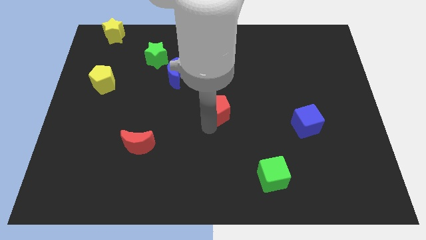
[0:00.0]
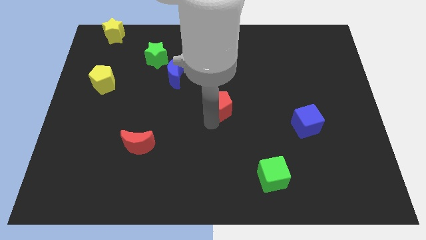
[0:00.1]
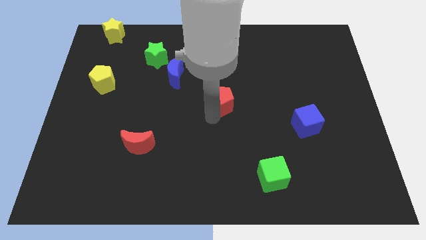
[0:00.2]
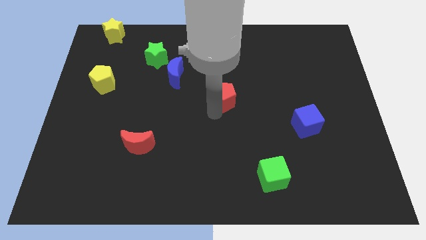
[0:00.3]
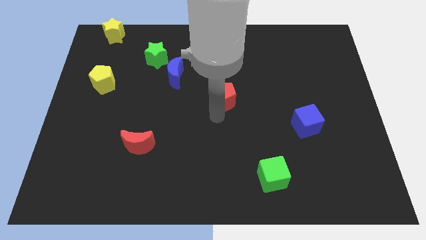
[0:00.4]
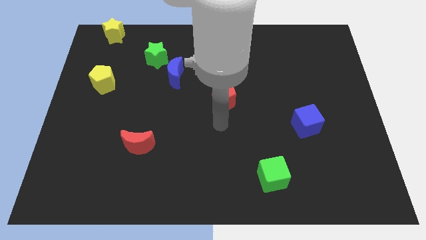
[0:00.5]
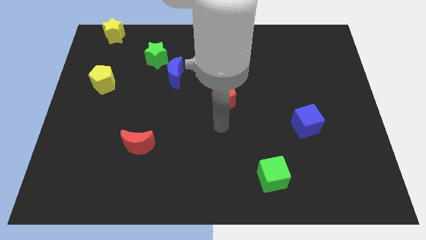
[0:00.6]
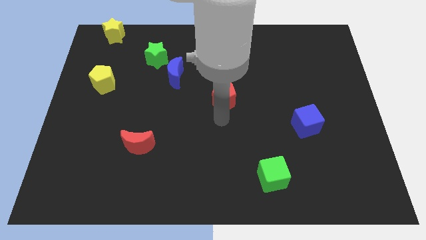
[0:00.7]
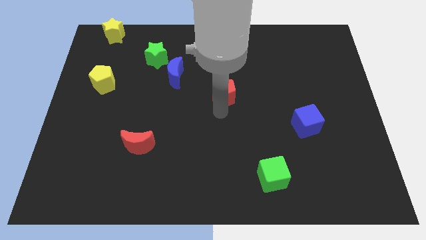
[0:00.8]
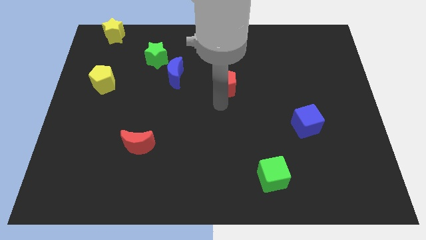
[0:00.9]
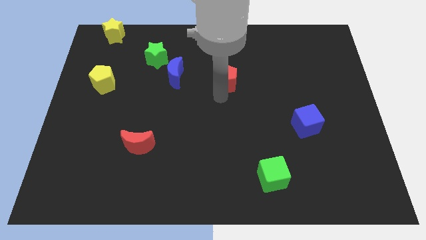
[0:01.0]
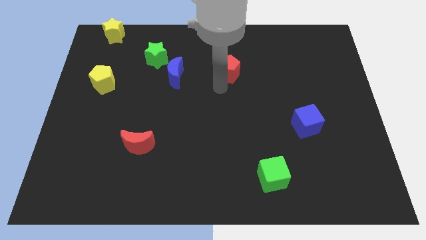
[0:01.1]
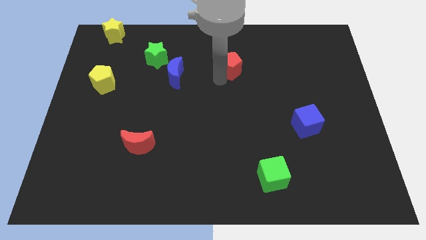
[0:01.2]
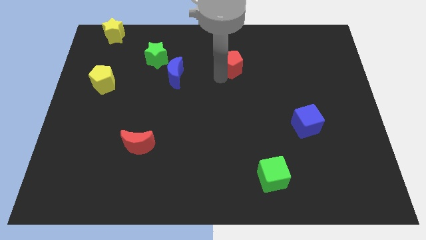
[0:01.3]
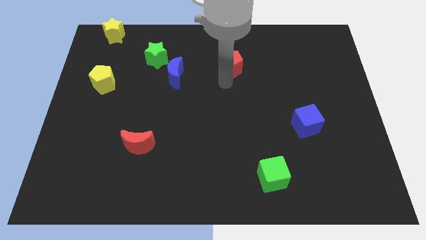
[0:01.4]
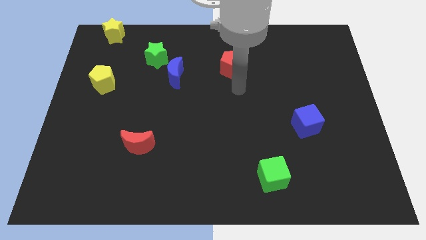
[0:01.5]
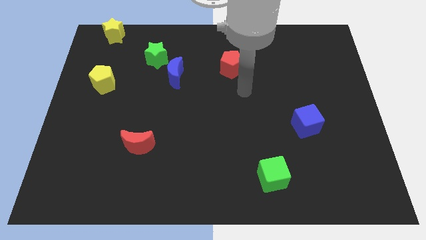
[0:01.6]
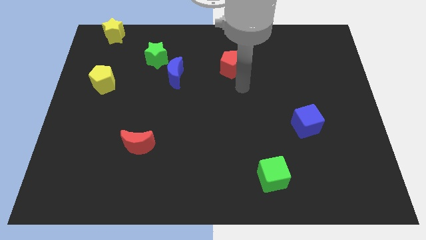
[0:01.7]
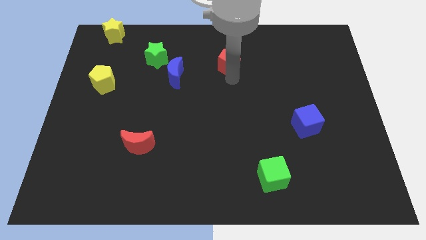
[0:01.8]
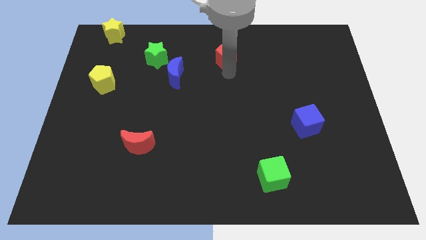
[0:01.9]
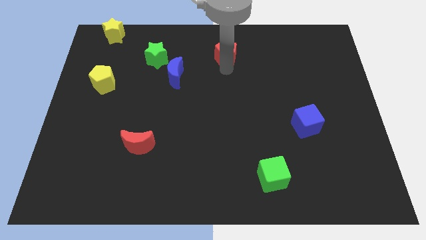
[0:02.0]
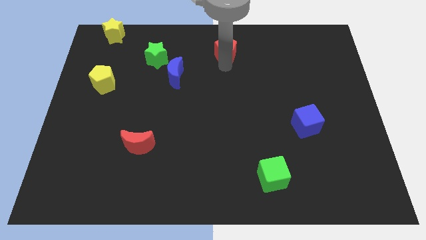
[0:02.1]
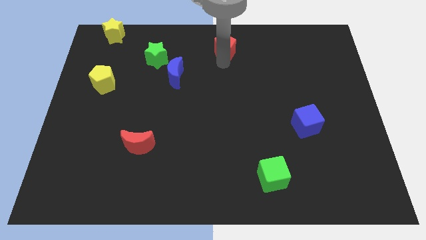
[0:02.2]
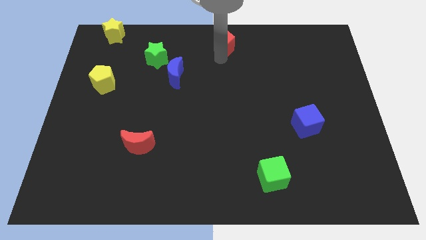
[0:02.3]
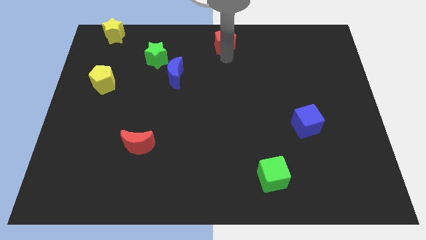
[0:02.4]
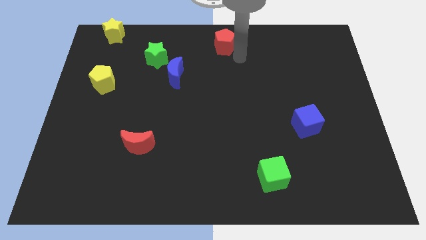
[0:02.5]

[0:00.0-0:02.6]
place the red pentagon at the top center

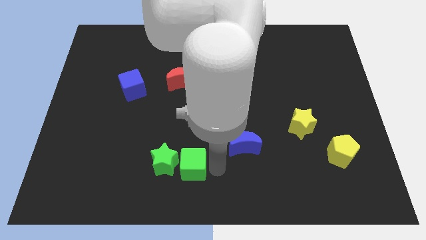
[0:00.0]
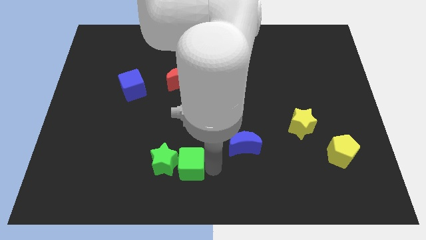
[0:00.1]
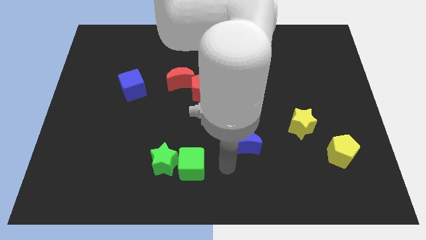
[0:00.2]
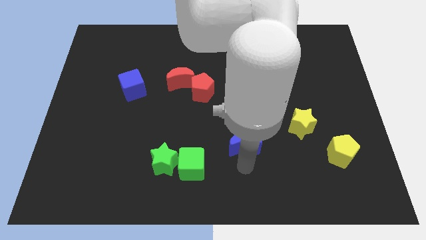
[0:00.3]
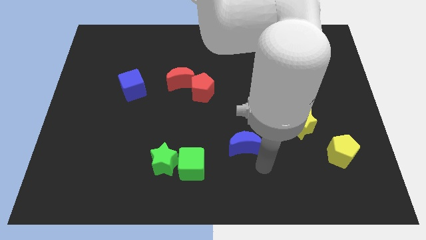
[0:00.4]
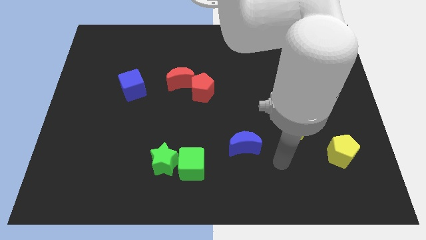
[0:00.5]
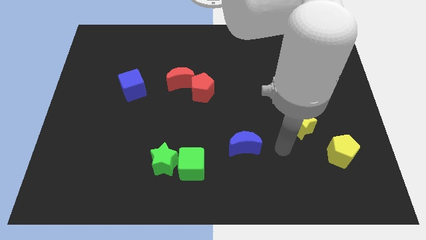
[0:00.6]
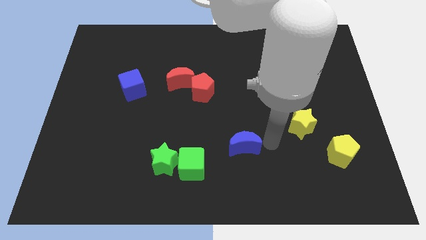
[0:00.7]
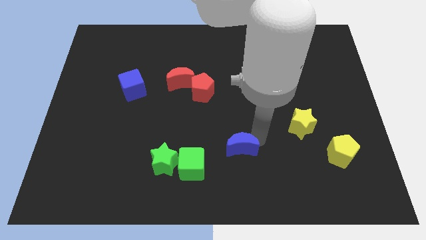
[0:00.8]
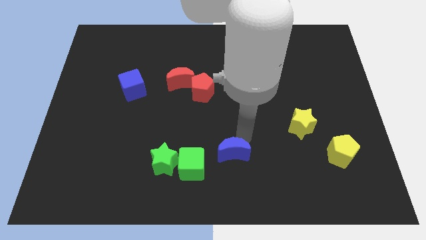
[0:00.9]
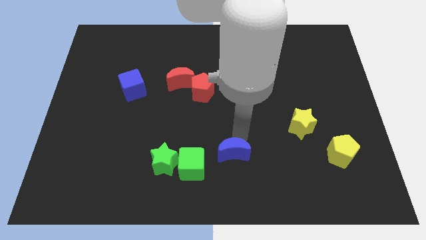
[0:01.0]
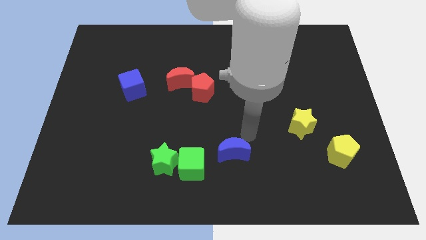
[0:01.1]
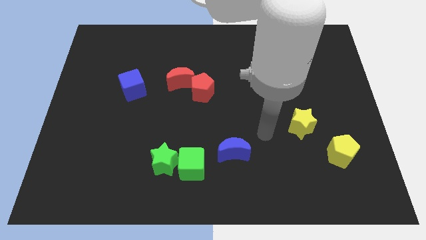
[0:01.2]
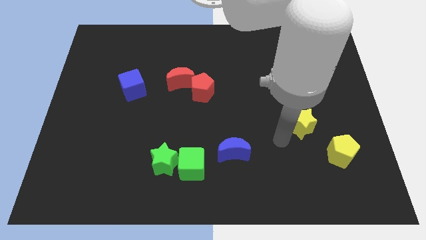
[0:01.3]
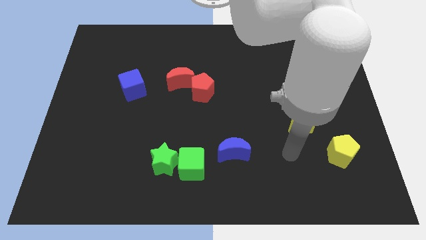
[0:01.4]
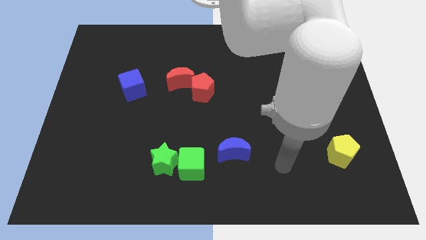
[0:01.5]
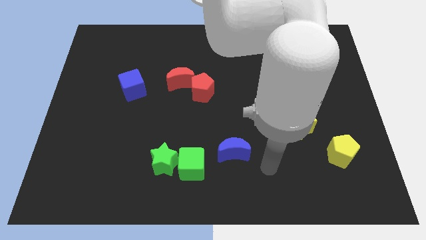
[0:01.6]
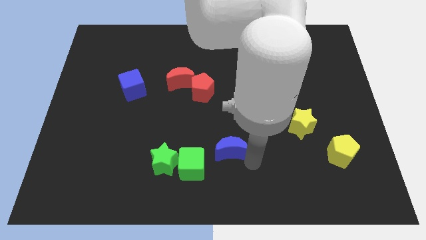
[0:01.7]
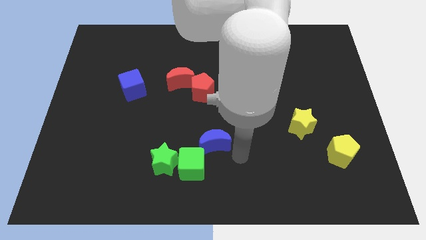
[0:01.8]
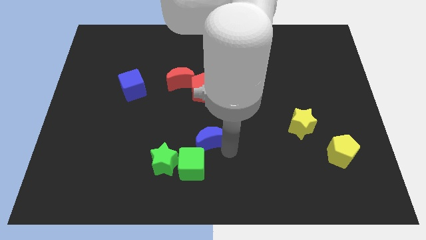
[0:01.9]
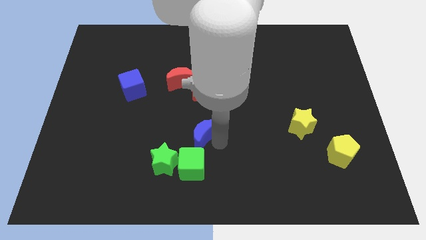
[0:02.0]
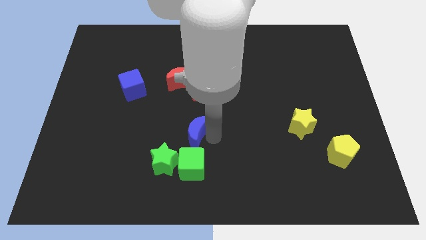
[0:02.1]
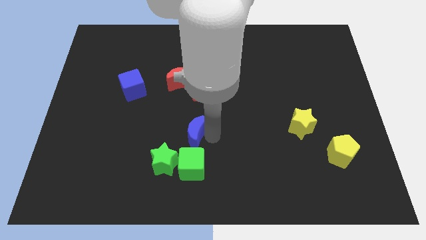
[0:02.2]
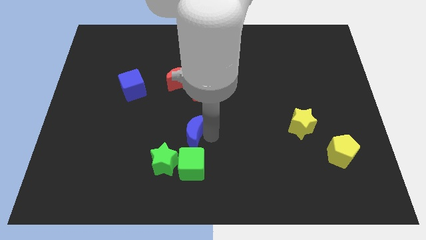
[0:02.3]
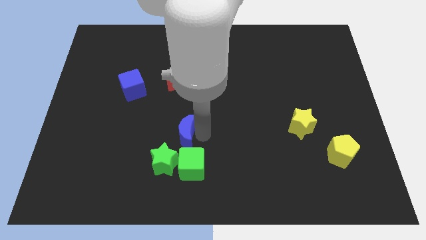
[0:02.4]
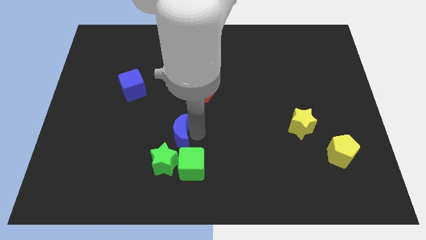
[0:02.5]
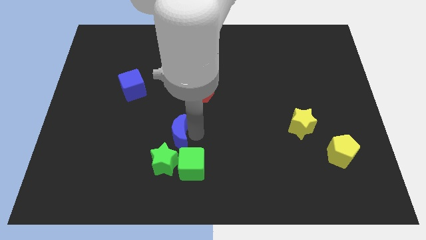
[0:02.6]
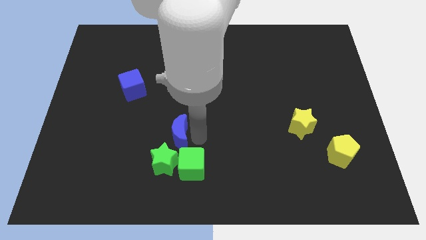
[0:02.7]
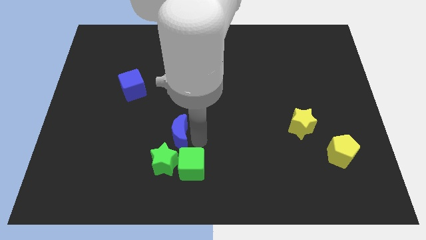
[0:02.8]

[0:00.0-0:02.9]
put the blue crescent above the green cube

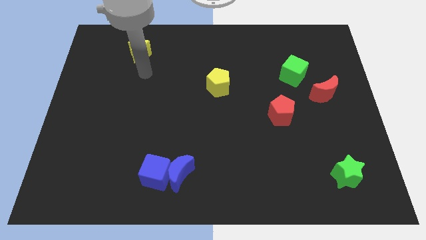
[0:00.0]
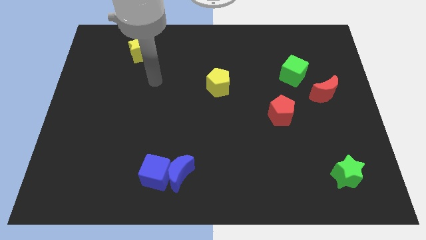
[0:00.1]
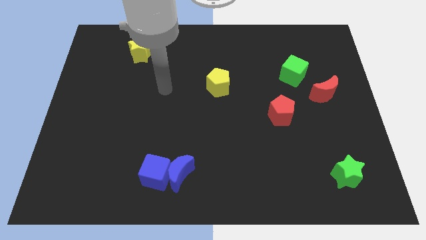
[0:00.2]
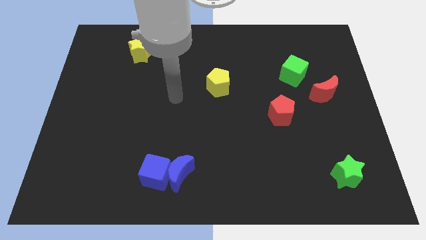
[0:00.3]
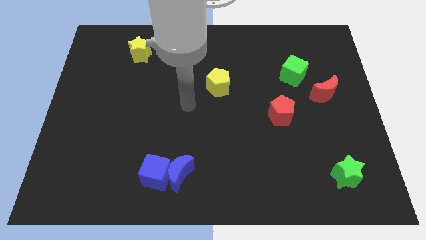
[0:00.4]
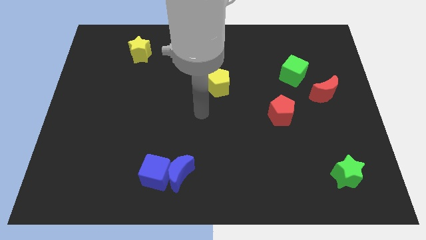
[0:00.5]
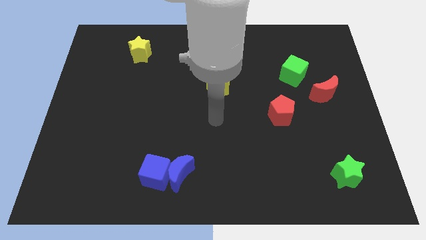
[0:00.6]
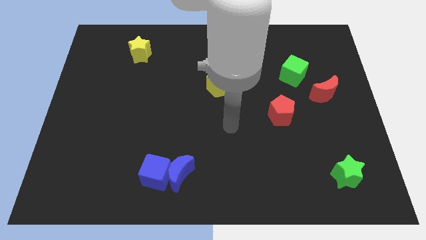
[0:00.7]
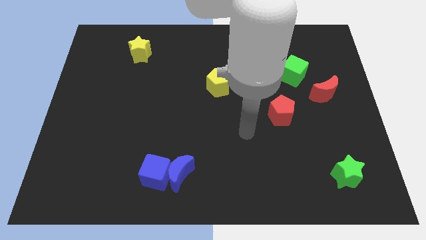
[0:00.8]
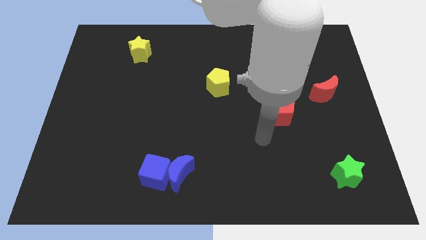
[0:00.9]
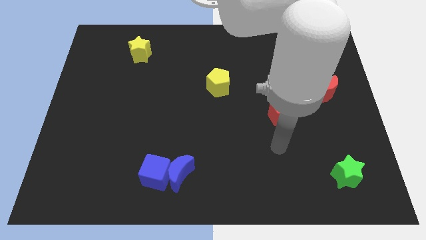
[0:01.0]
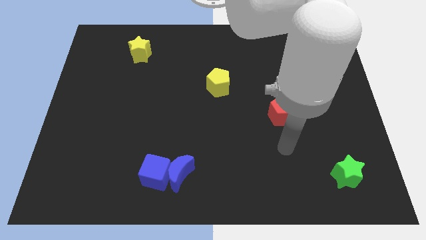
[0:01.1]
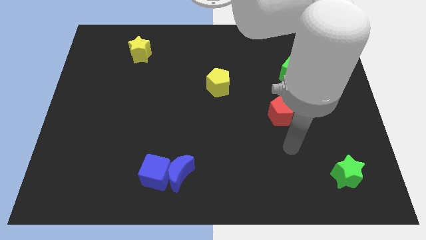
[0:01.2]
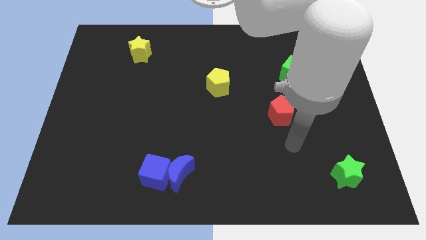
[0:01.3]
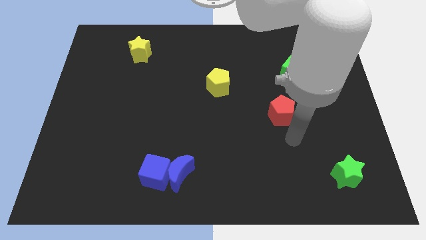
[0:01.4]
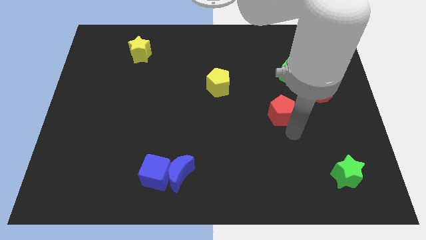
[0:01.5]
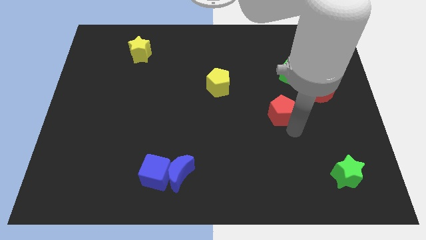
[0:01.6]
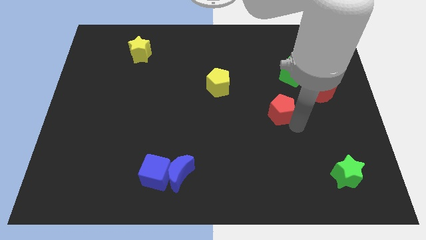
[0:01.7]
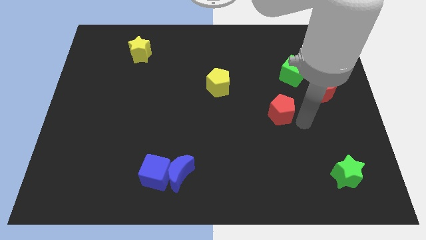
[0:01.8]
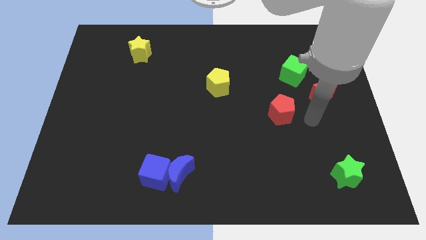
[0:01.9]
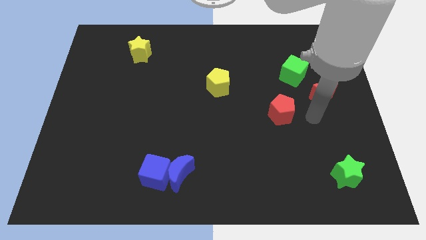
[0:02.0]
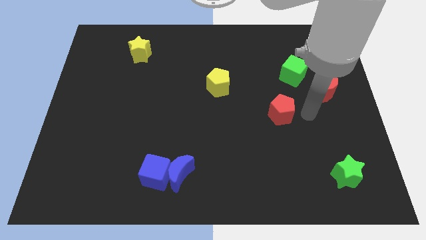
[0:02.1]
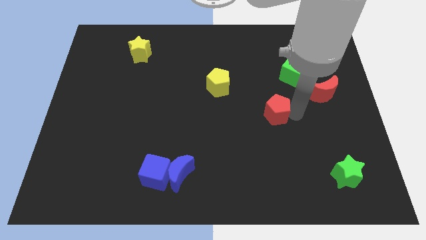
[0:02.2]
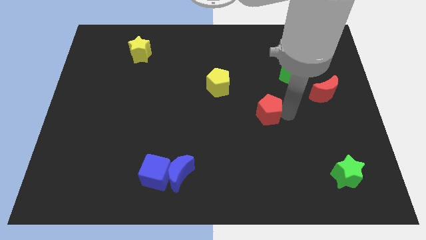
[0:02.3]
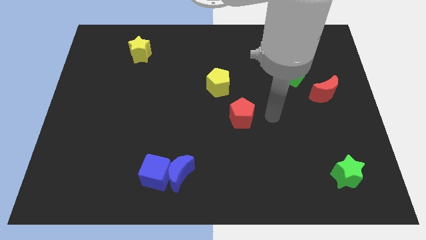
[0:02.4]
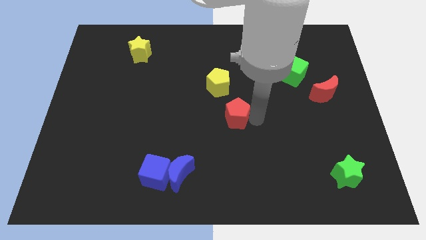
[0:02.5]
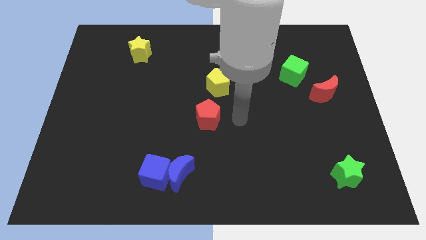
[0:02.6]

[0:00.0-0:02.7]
place red pentagon to the bottom of yellow pentagon

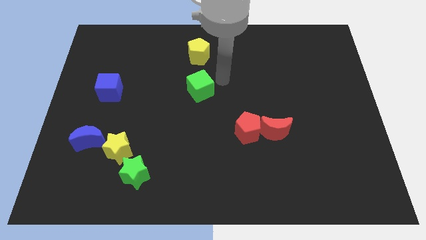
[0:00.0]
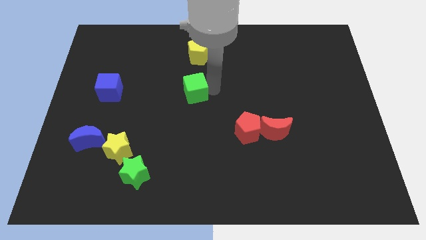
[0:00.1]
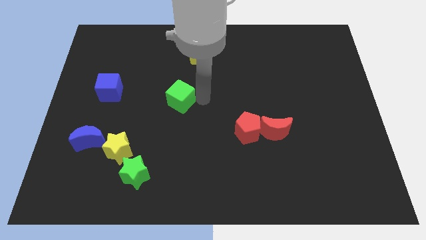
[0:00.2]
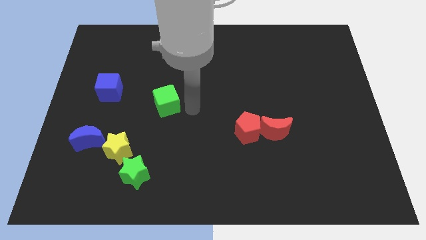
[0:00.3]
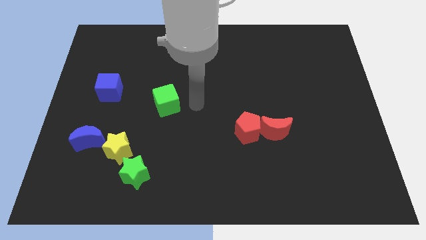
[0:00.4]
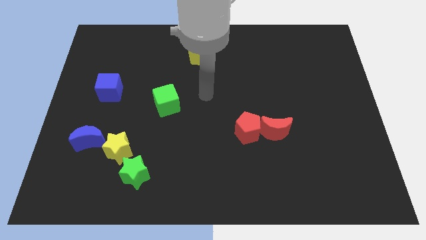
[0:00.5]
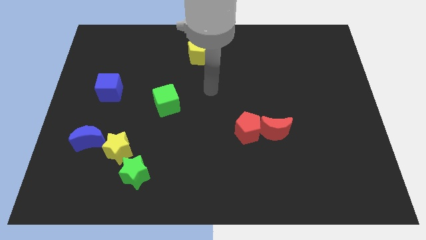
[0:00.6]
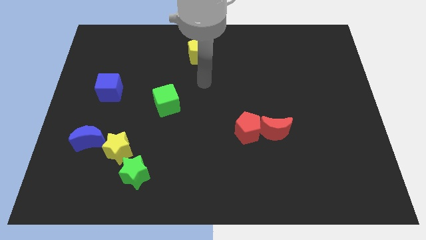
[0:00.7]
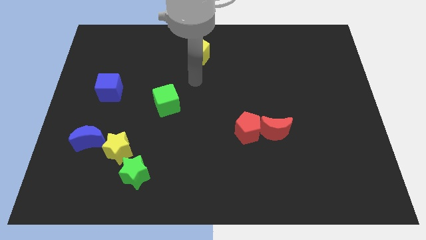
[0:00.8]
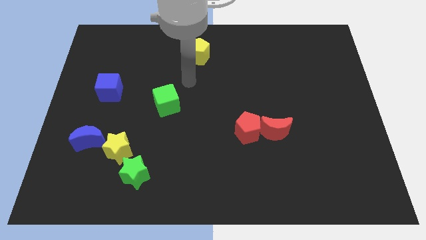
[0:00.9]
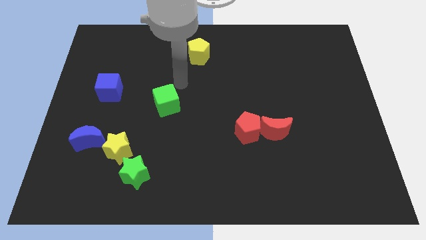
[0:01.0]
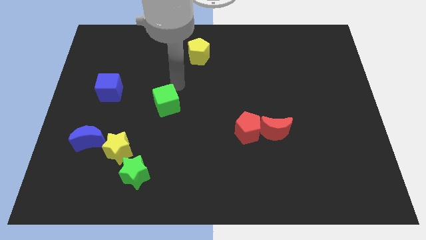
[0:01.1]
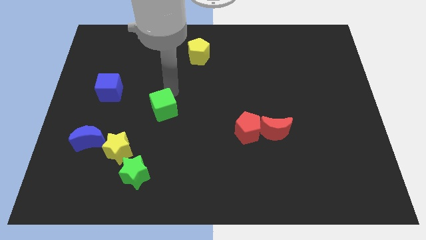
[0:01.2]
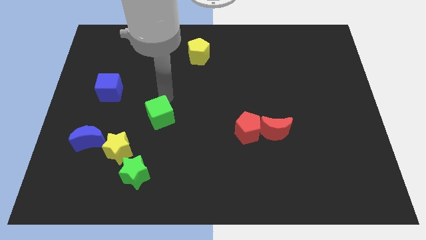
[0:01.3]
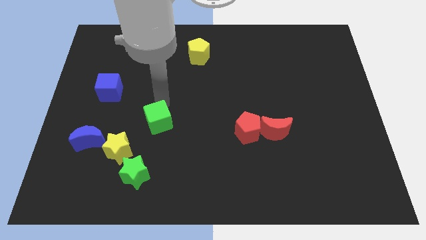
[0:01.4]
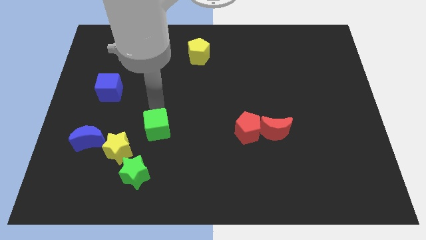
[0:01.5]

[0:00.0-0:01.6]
move the green cube to the bottom right of the blue cube
